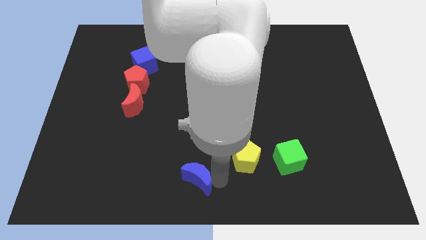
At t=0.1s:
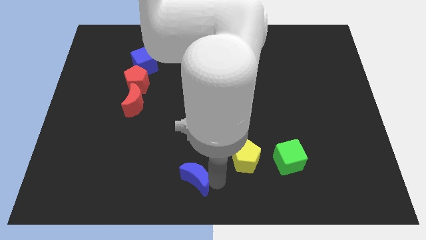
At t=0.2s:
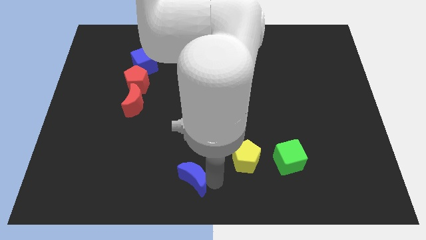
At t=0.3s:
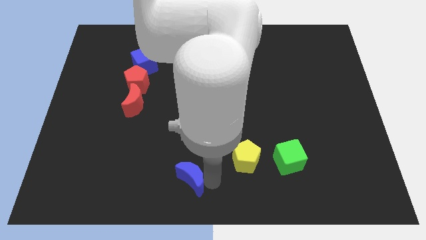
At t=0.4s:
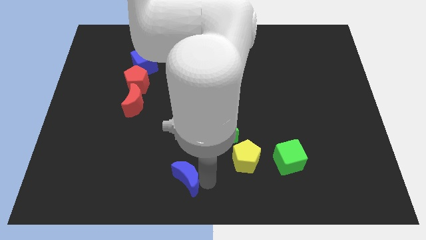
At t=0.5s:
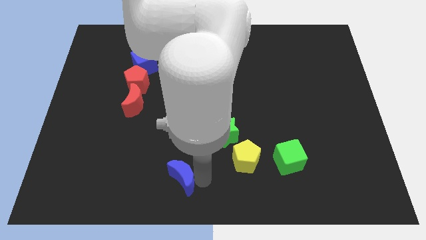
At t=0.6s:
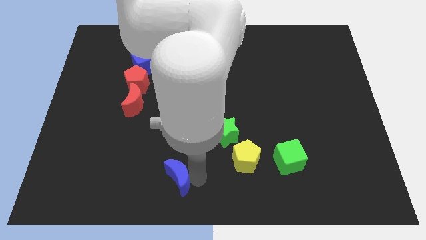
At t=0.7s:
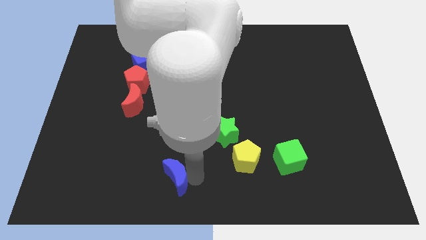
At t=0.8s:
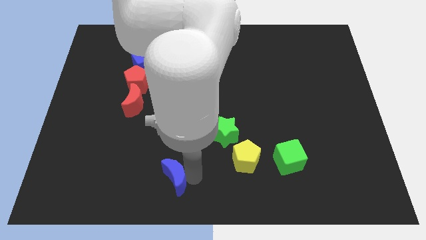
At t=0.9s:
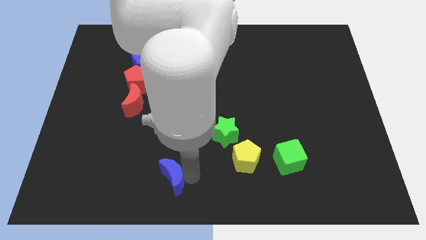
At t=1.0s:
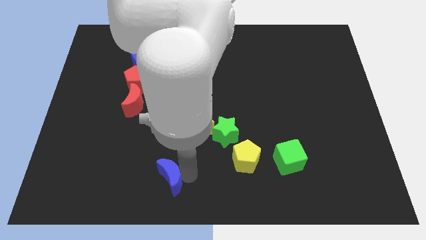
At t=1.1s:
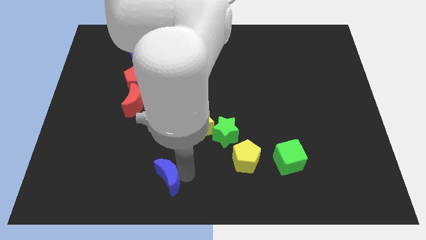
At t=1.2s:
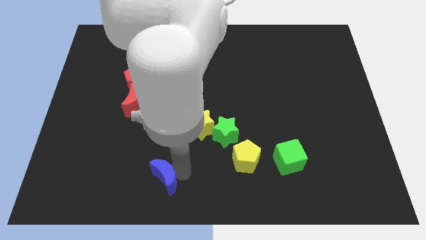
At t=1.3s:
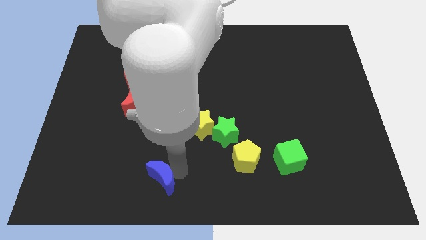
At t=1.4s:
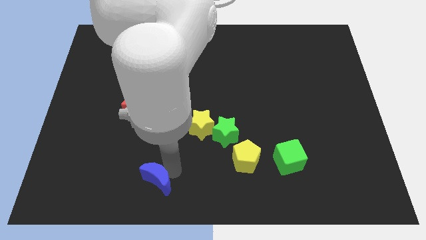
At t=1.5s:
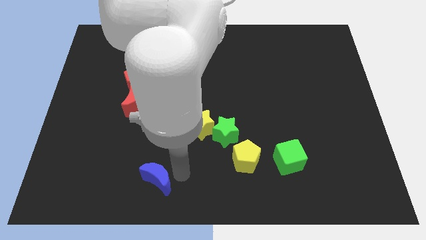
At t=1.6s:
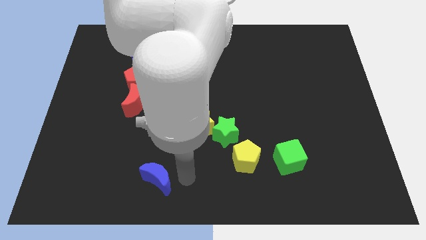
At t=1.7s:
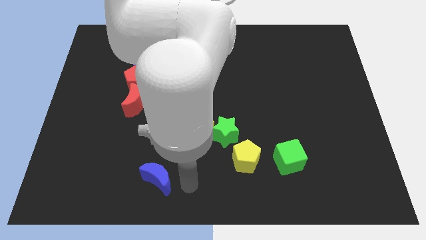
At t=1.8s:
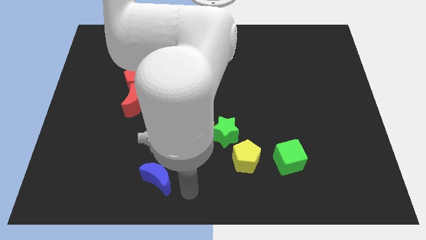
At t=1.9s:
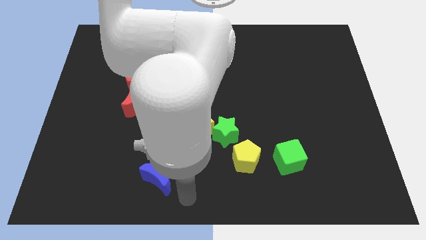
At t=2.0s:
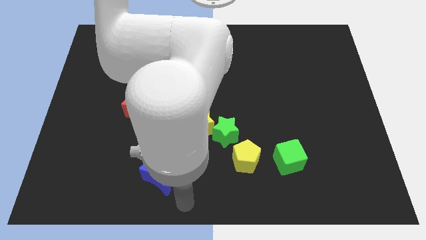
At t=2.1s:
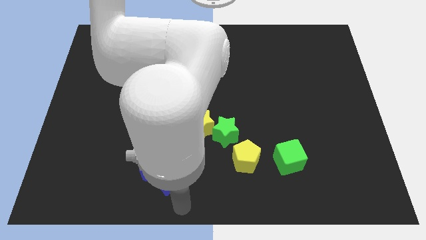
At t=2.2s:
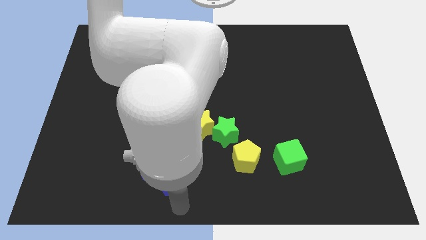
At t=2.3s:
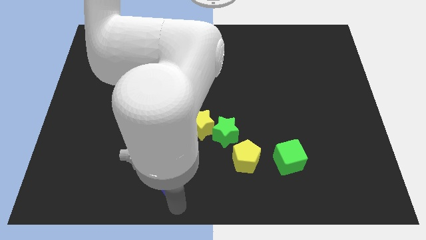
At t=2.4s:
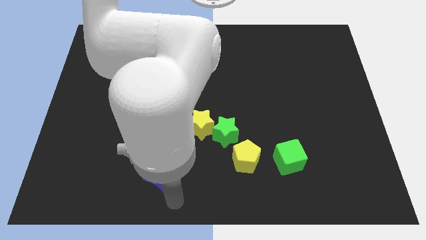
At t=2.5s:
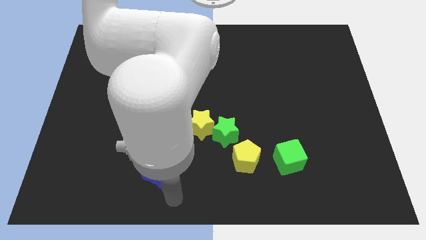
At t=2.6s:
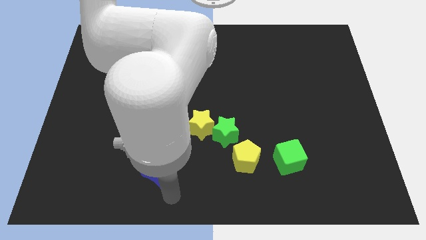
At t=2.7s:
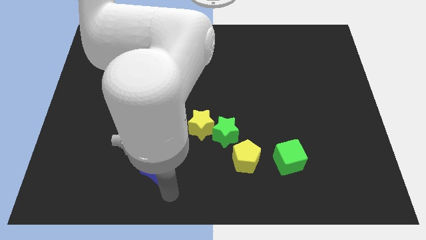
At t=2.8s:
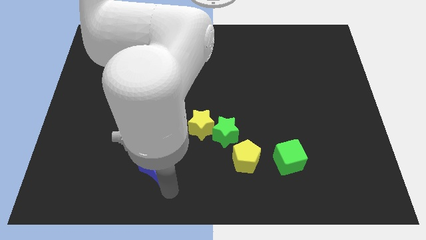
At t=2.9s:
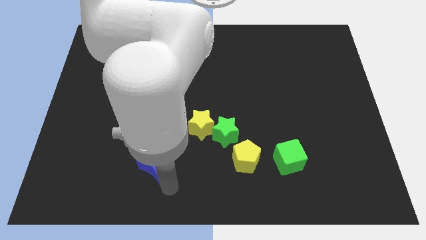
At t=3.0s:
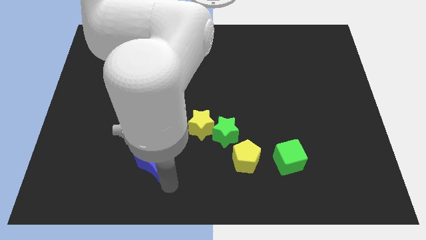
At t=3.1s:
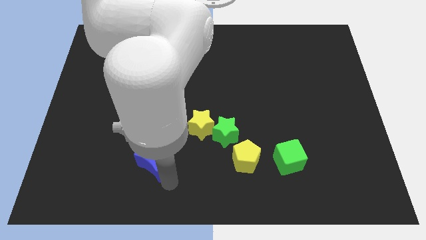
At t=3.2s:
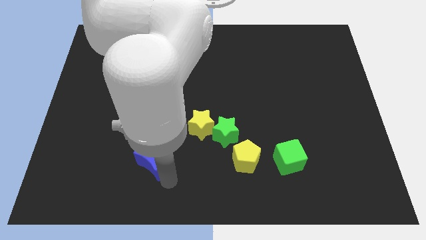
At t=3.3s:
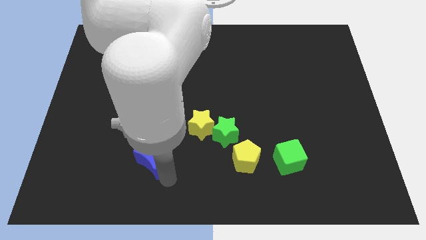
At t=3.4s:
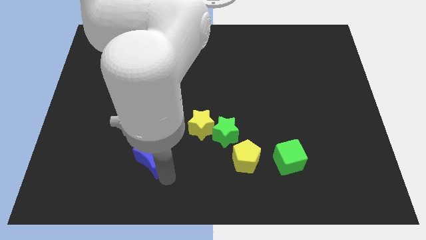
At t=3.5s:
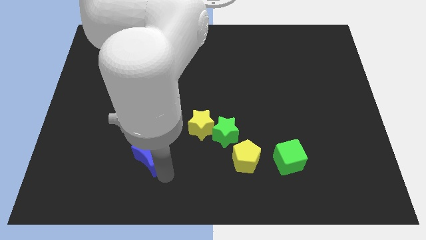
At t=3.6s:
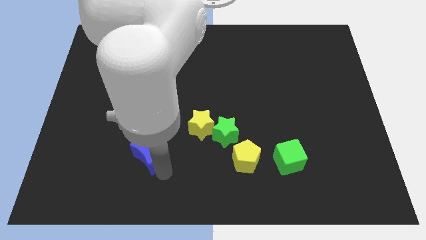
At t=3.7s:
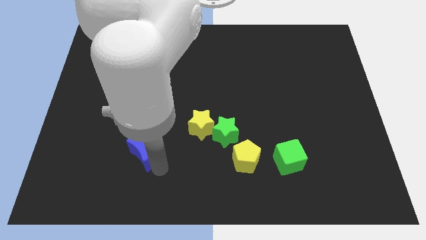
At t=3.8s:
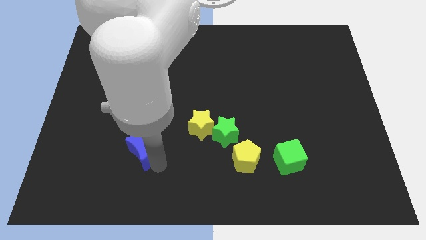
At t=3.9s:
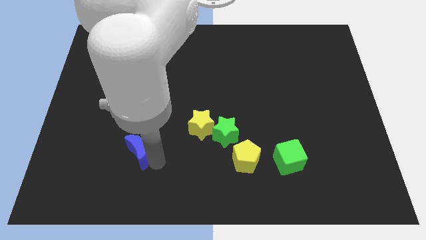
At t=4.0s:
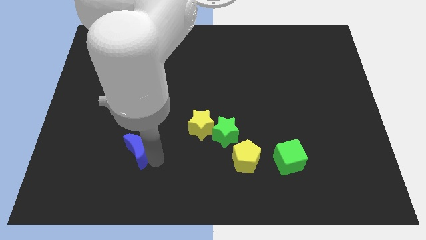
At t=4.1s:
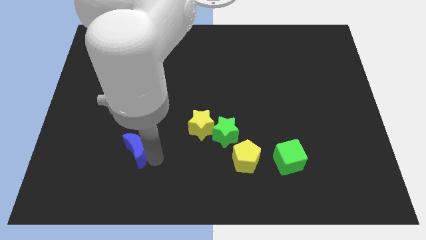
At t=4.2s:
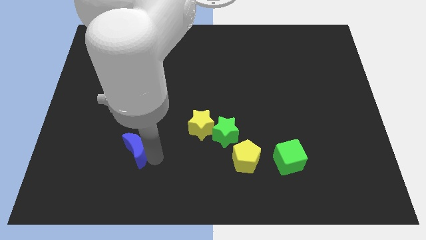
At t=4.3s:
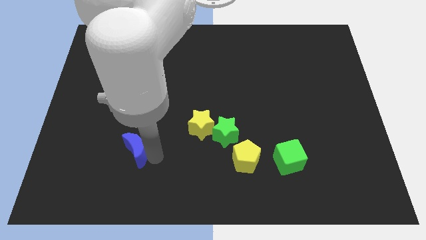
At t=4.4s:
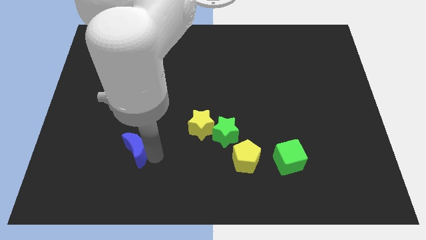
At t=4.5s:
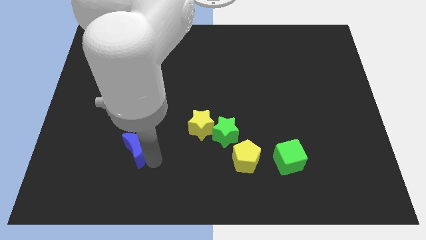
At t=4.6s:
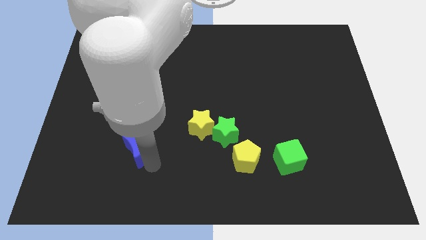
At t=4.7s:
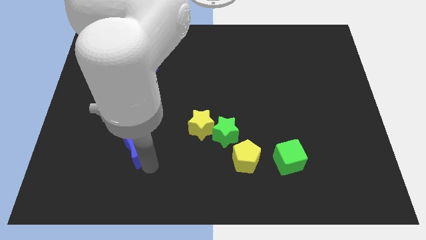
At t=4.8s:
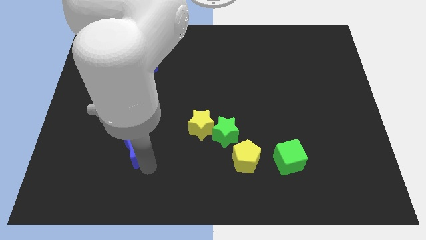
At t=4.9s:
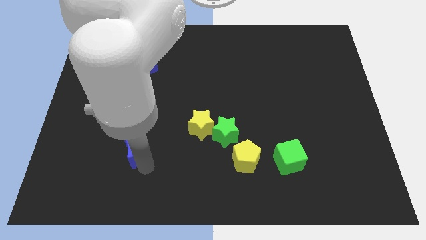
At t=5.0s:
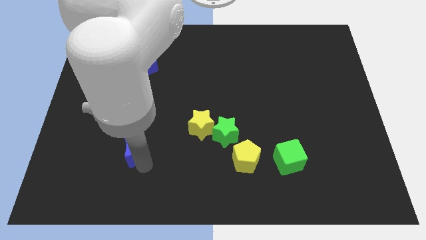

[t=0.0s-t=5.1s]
push the blue crescent to the left of the board

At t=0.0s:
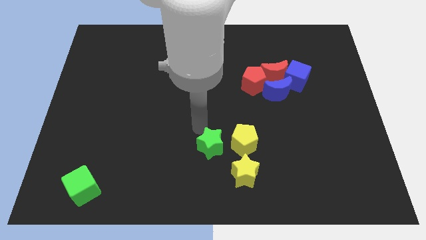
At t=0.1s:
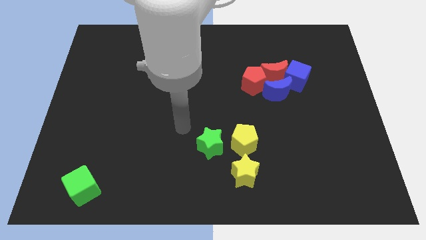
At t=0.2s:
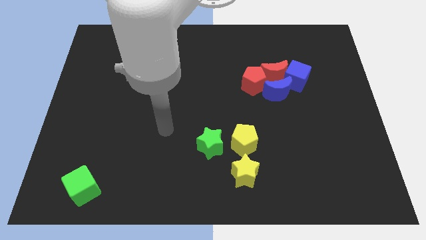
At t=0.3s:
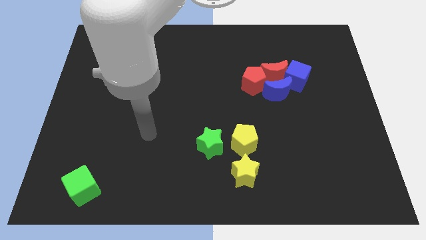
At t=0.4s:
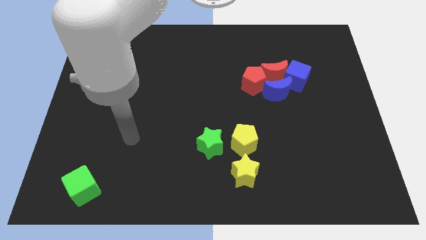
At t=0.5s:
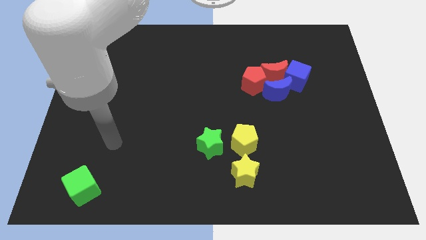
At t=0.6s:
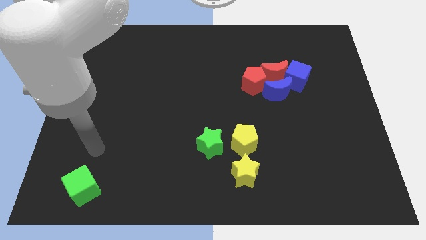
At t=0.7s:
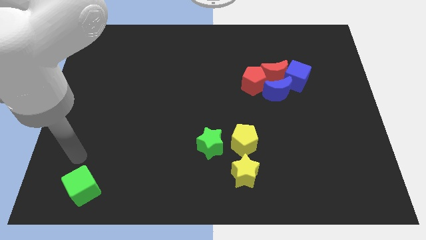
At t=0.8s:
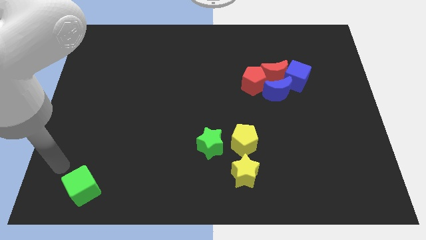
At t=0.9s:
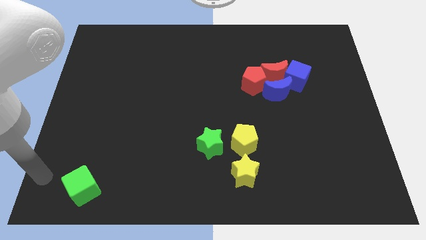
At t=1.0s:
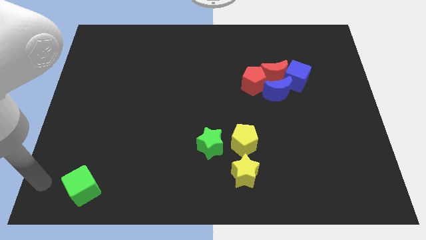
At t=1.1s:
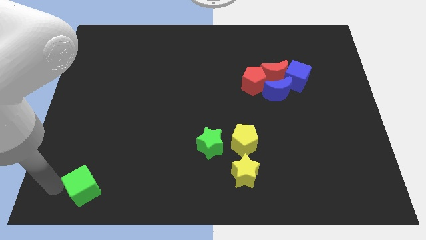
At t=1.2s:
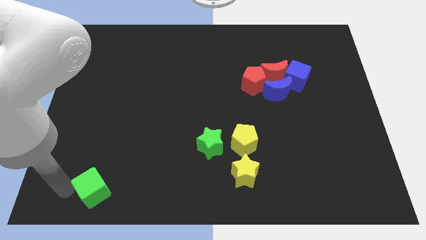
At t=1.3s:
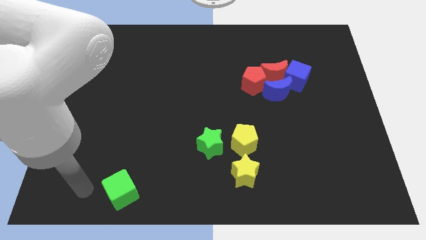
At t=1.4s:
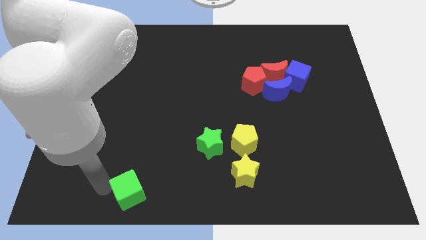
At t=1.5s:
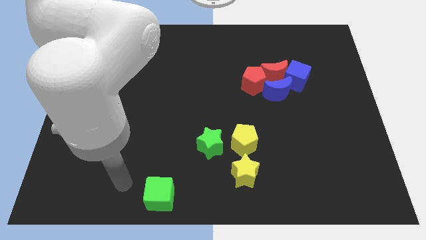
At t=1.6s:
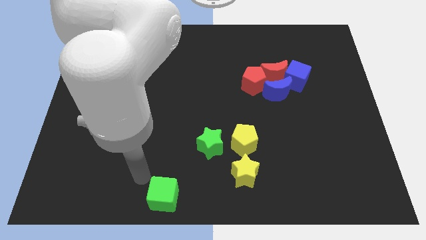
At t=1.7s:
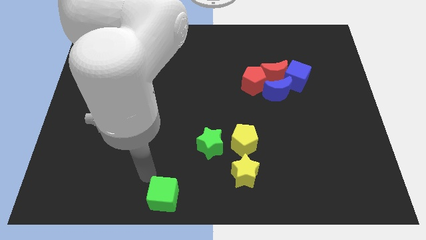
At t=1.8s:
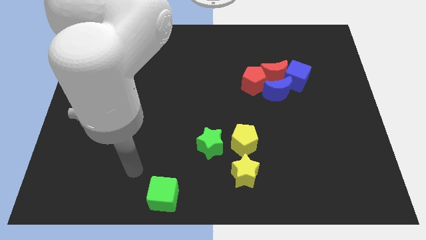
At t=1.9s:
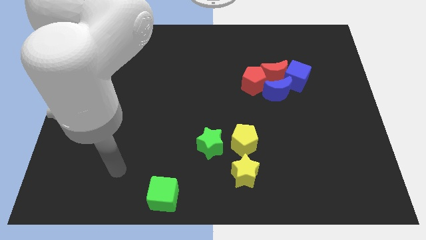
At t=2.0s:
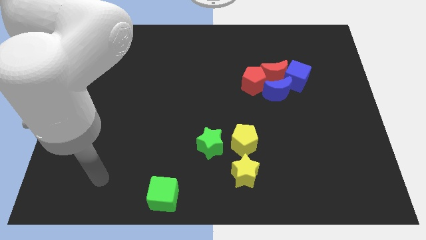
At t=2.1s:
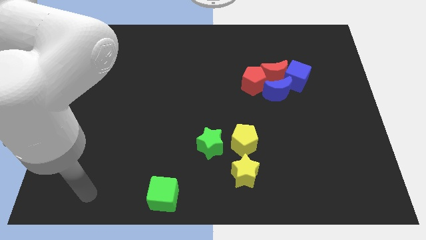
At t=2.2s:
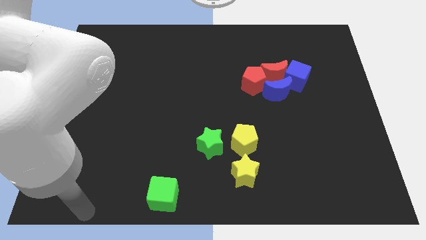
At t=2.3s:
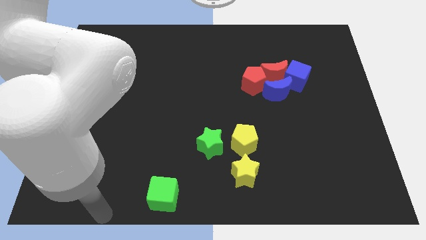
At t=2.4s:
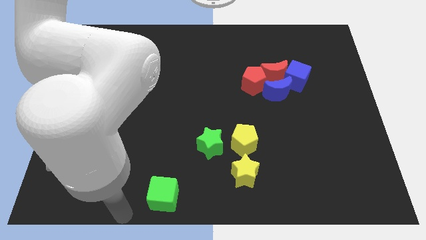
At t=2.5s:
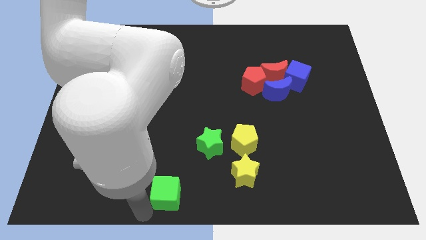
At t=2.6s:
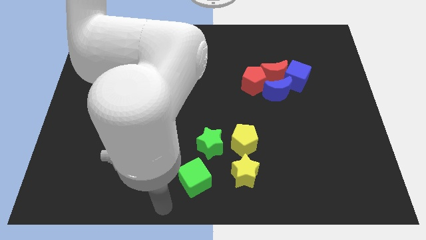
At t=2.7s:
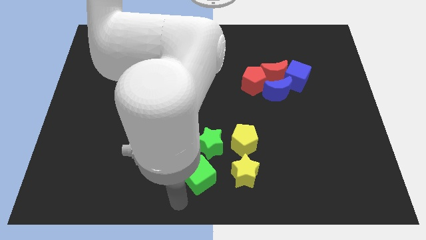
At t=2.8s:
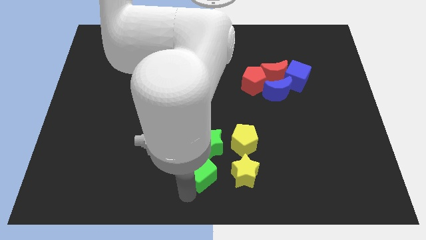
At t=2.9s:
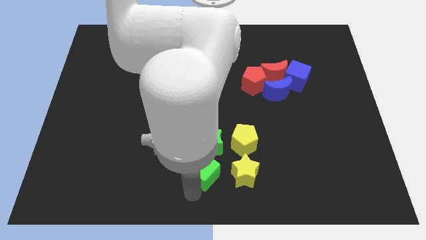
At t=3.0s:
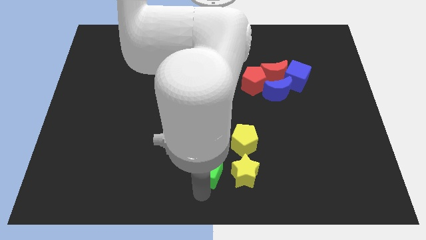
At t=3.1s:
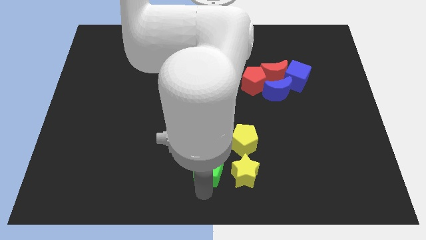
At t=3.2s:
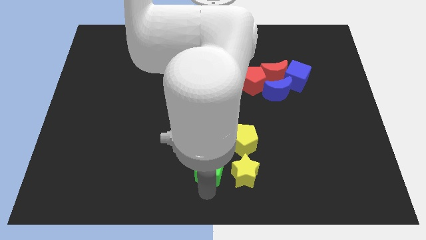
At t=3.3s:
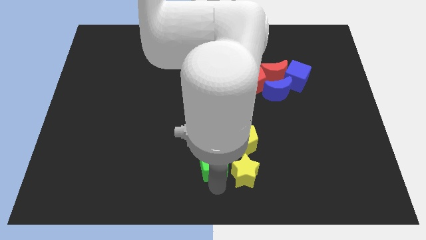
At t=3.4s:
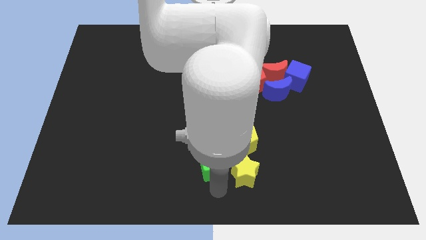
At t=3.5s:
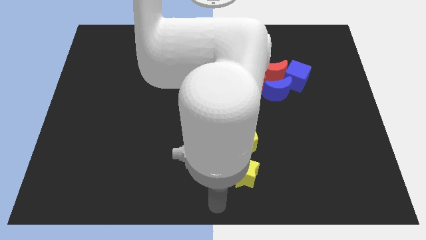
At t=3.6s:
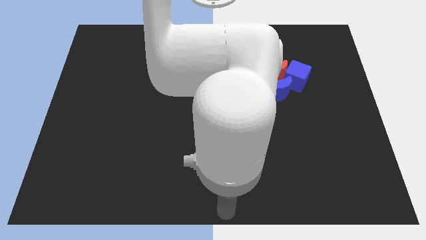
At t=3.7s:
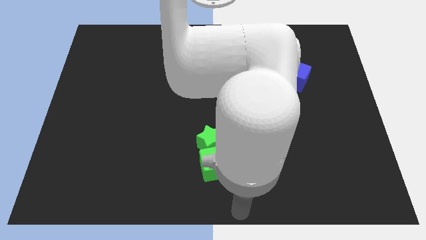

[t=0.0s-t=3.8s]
push the green cube into the green star

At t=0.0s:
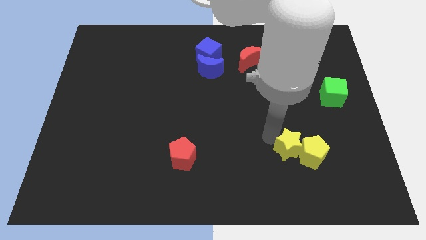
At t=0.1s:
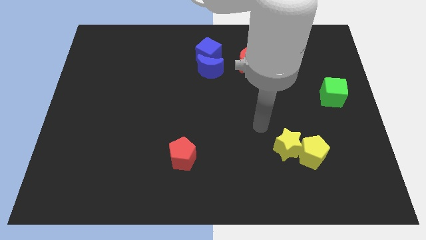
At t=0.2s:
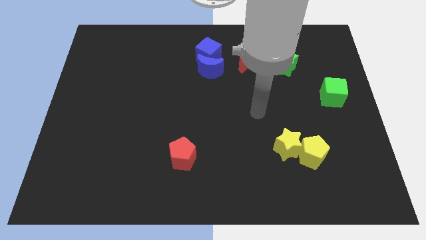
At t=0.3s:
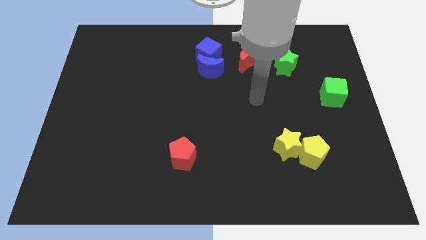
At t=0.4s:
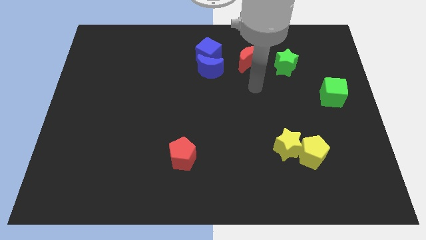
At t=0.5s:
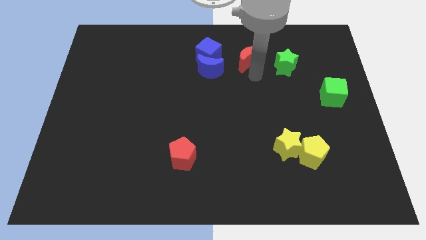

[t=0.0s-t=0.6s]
move your hand away from the yellow star
